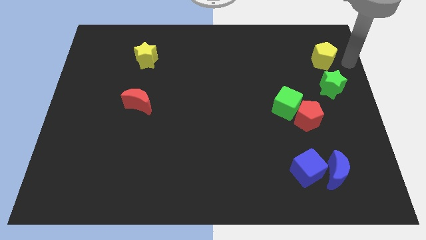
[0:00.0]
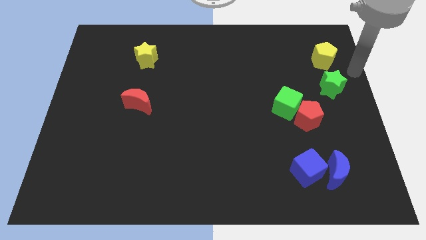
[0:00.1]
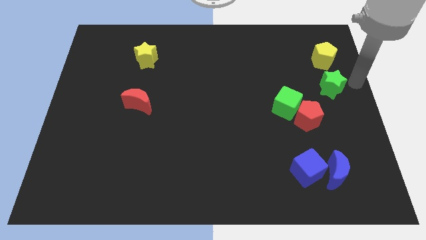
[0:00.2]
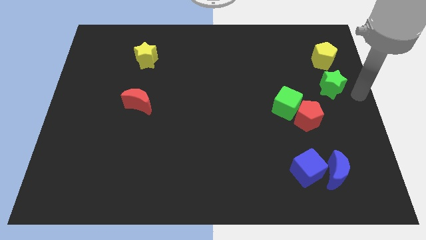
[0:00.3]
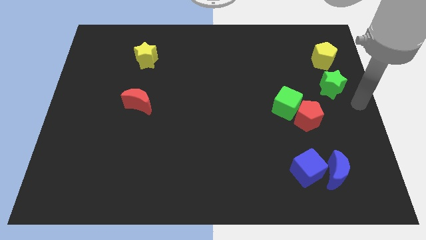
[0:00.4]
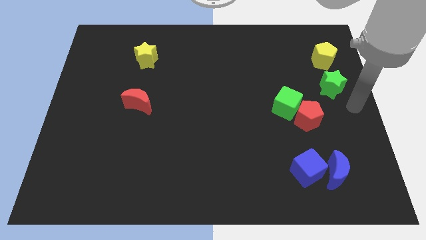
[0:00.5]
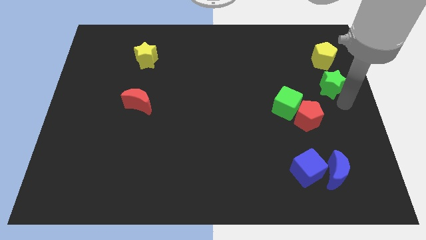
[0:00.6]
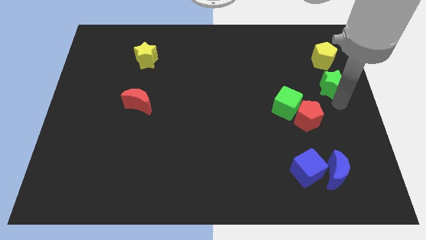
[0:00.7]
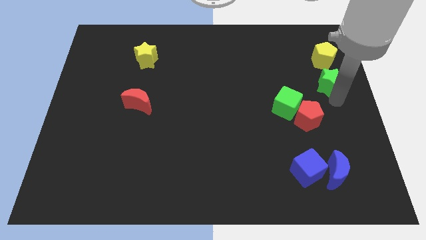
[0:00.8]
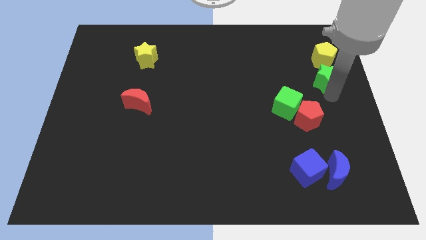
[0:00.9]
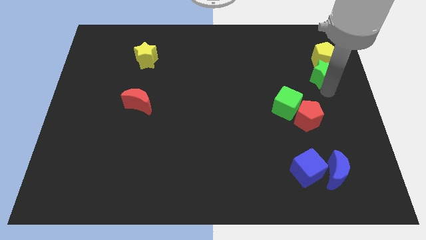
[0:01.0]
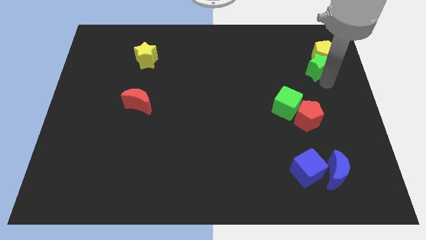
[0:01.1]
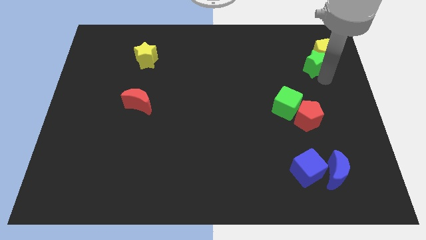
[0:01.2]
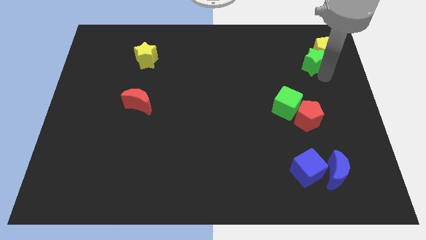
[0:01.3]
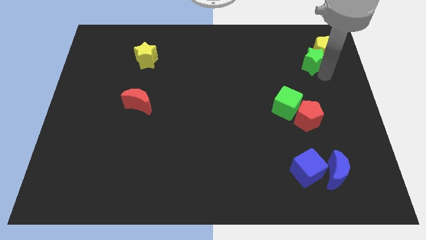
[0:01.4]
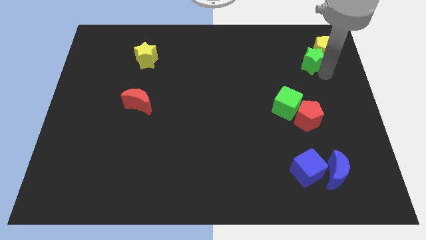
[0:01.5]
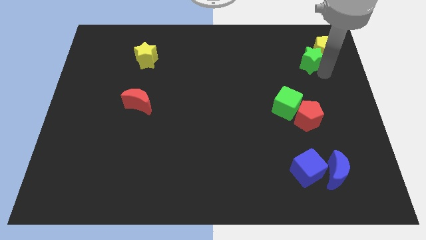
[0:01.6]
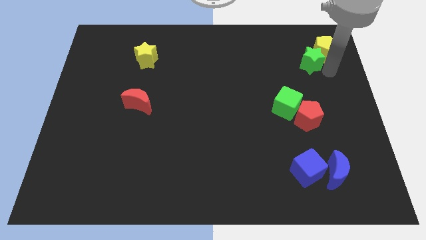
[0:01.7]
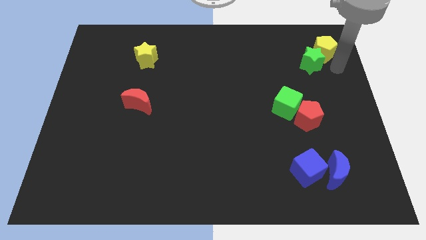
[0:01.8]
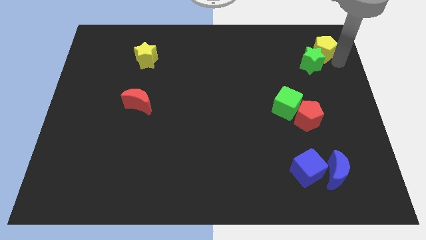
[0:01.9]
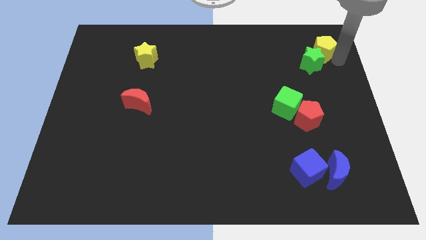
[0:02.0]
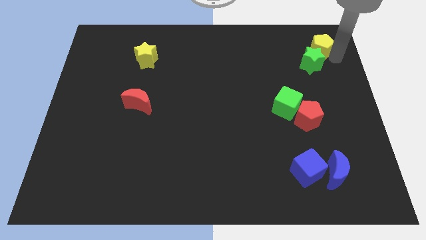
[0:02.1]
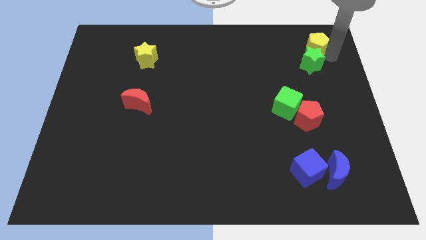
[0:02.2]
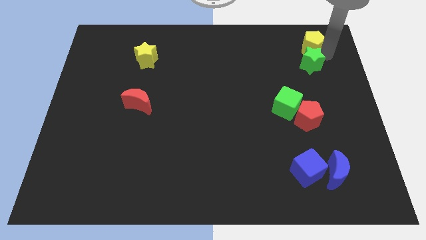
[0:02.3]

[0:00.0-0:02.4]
push the green star close to the yellow pentagon

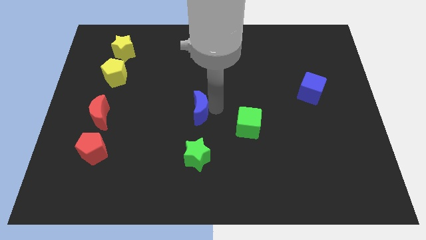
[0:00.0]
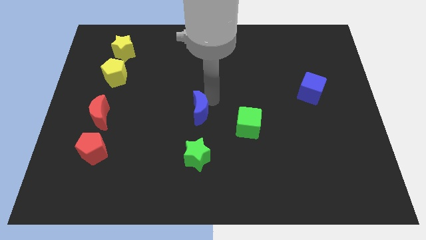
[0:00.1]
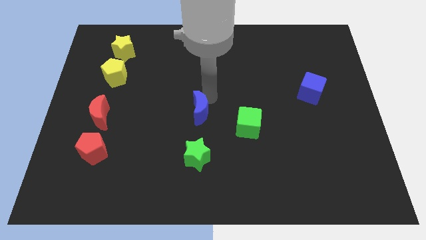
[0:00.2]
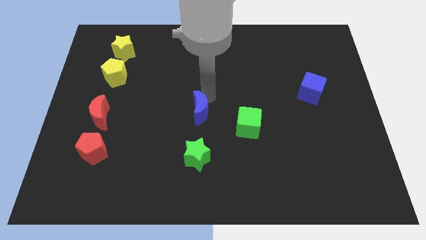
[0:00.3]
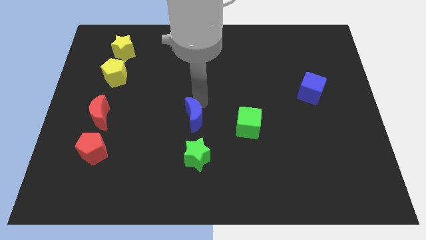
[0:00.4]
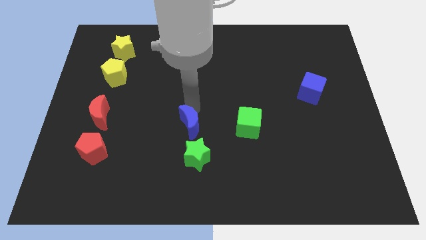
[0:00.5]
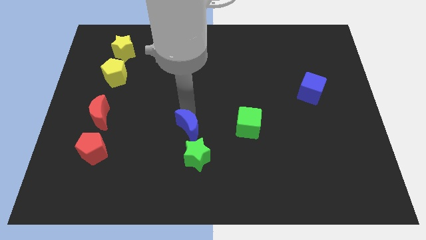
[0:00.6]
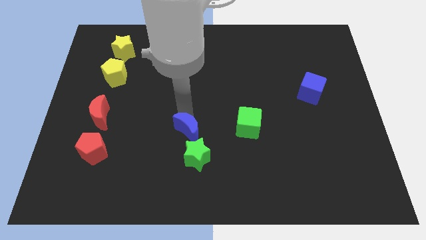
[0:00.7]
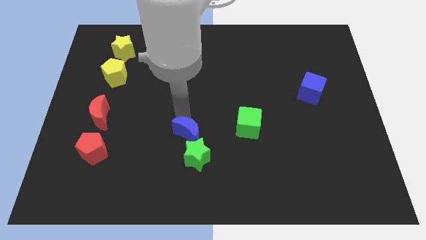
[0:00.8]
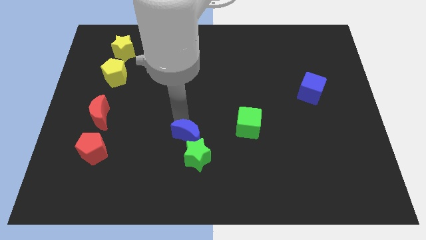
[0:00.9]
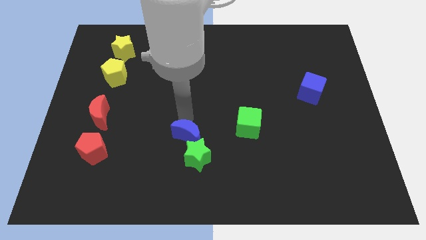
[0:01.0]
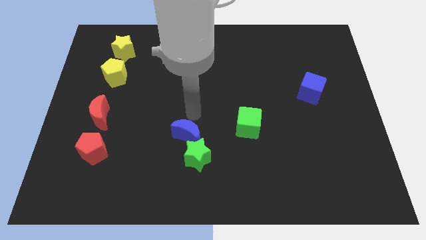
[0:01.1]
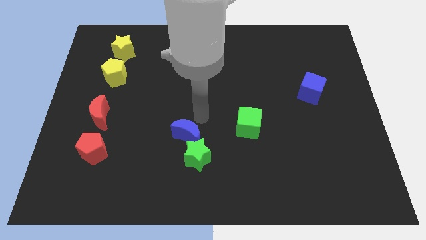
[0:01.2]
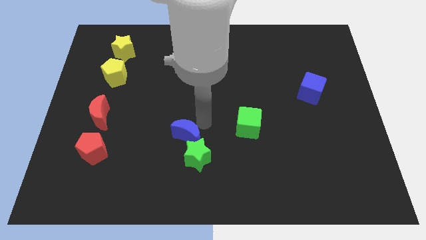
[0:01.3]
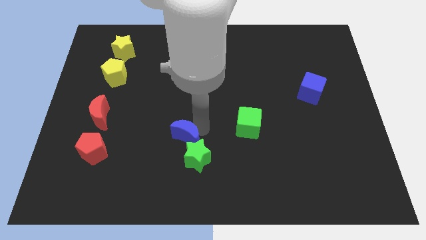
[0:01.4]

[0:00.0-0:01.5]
move the blue crescent into the green star

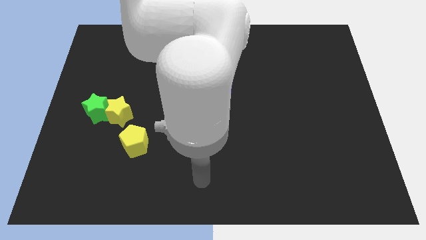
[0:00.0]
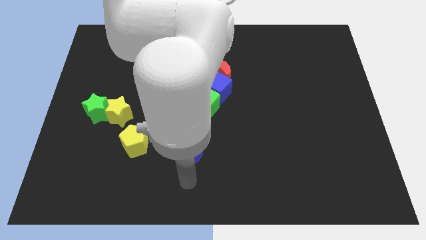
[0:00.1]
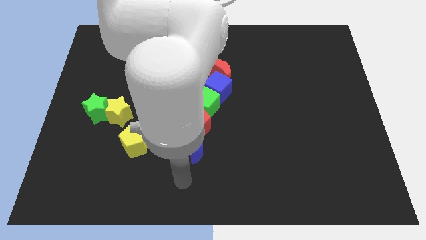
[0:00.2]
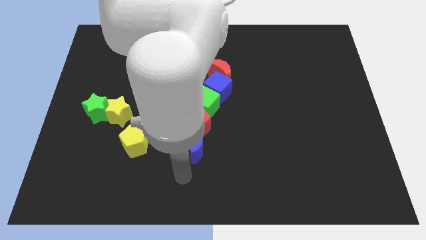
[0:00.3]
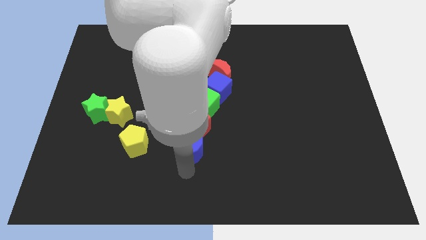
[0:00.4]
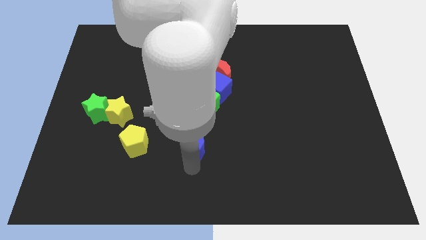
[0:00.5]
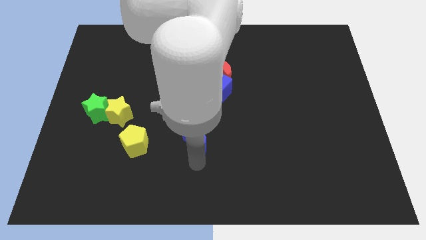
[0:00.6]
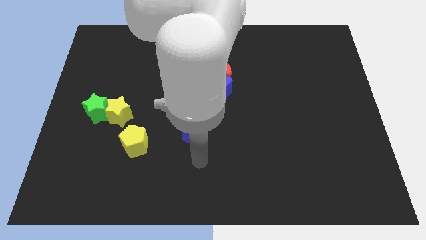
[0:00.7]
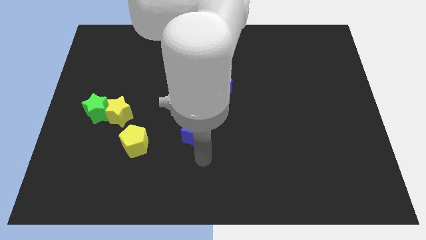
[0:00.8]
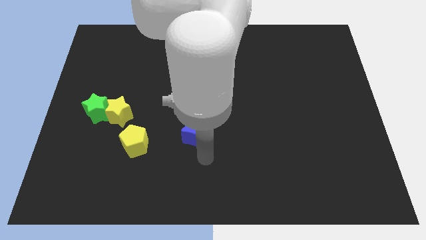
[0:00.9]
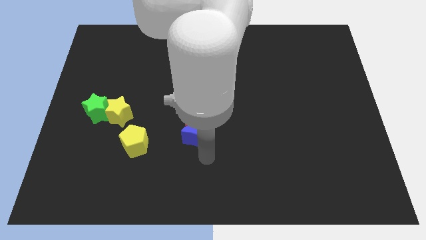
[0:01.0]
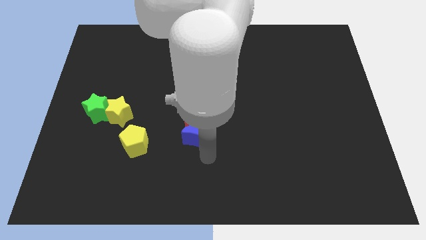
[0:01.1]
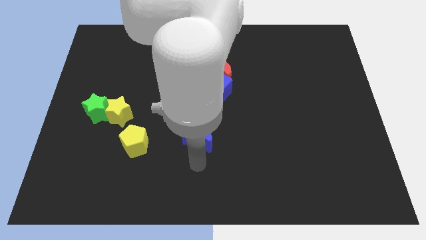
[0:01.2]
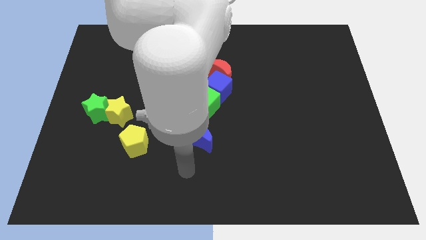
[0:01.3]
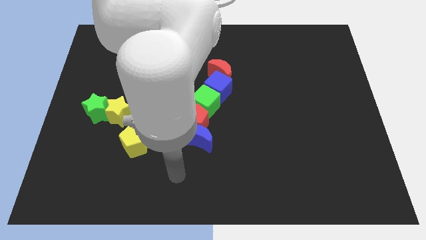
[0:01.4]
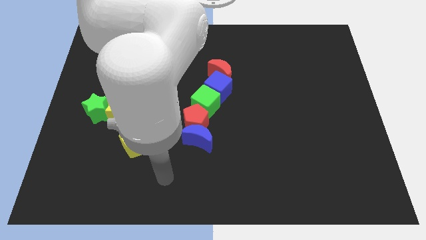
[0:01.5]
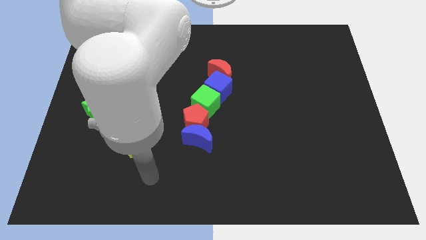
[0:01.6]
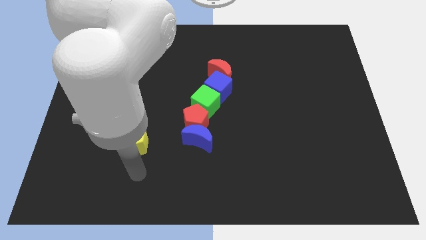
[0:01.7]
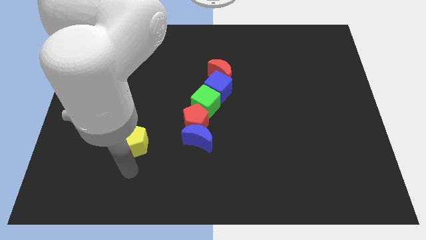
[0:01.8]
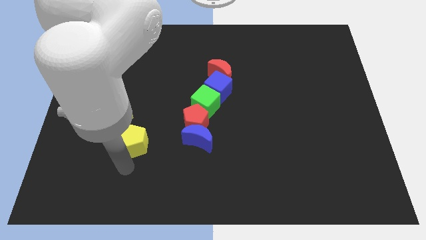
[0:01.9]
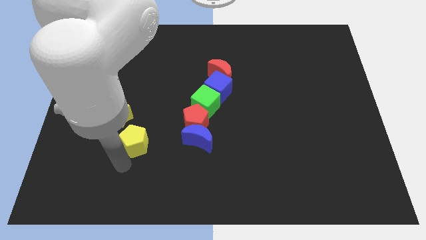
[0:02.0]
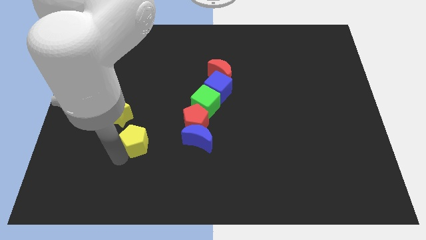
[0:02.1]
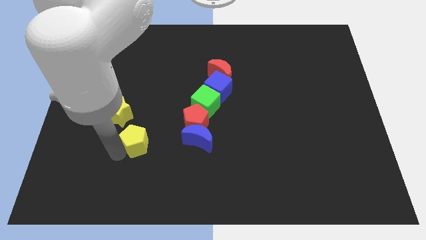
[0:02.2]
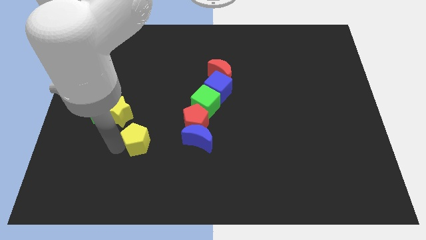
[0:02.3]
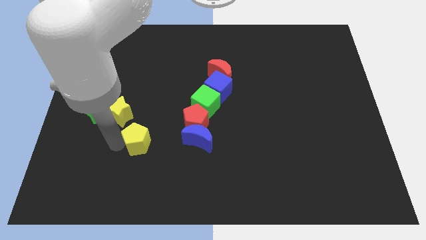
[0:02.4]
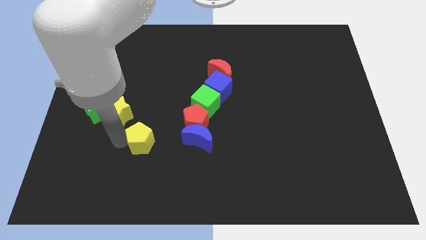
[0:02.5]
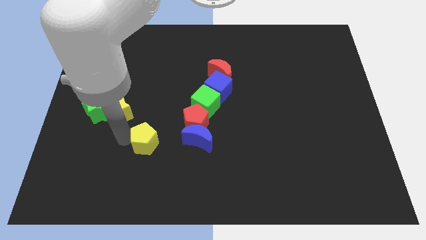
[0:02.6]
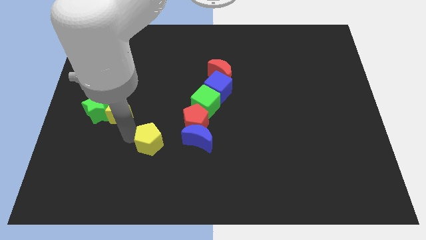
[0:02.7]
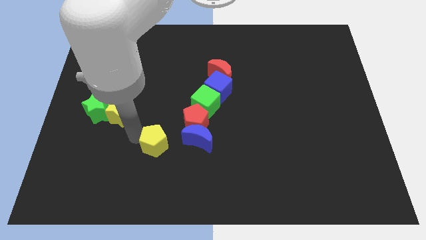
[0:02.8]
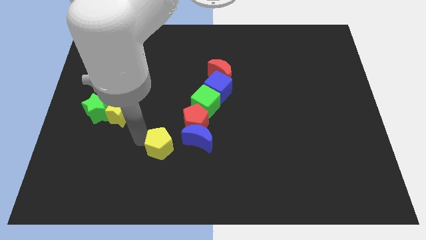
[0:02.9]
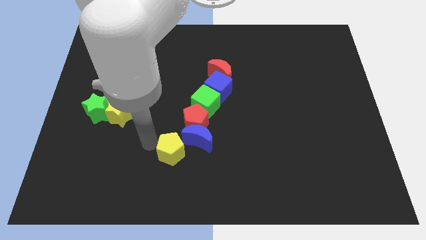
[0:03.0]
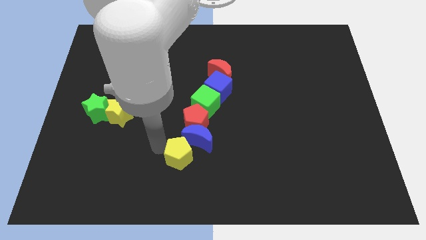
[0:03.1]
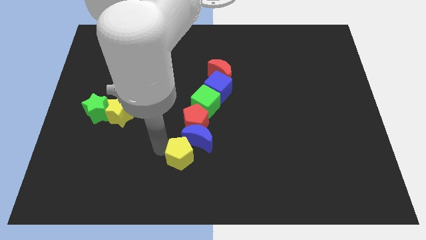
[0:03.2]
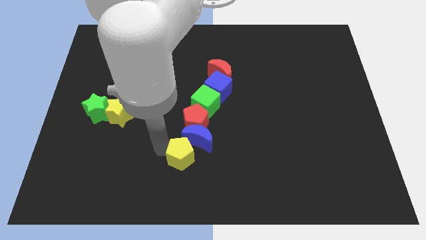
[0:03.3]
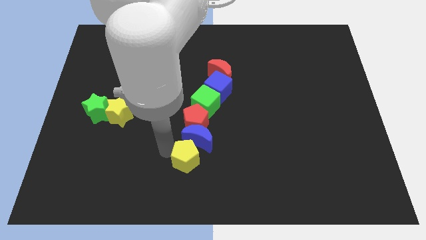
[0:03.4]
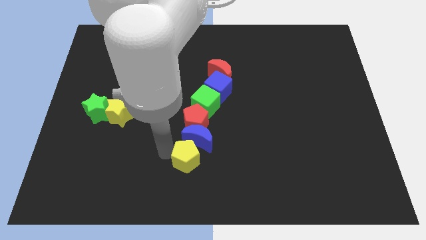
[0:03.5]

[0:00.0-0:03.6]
push the yellow pentagon to the bottom side of the blue moon

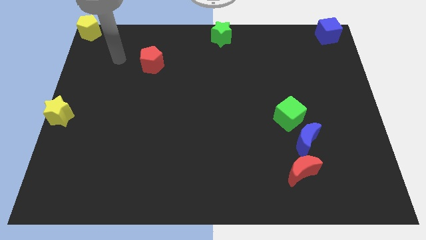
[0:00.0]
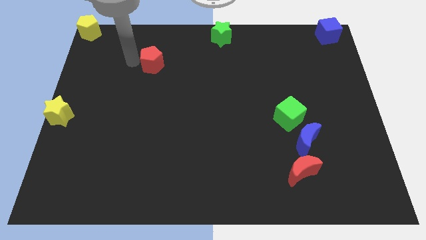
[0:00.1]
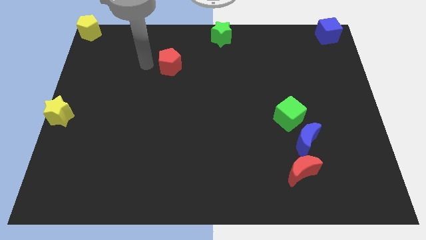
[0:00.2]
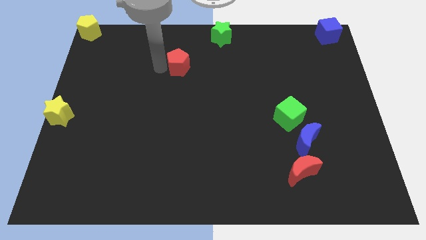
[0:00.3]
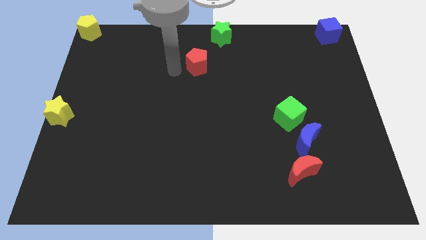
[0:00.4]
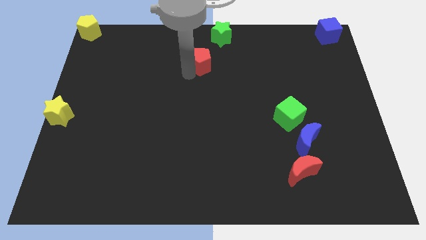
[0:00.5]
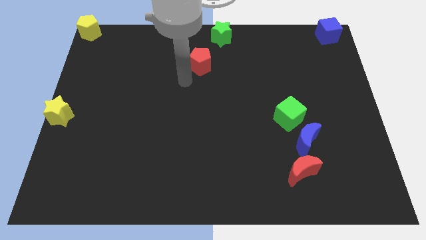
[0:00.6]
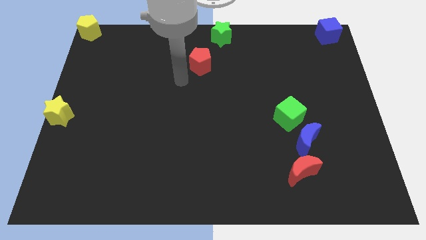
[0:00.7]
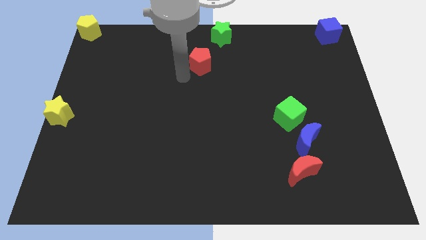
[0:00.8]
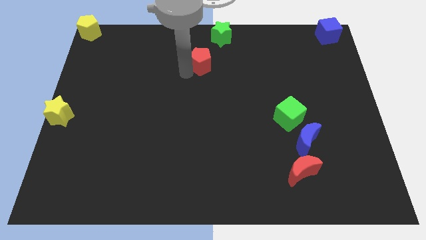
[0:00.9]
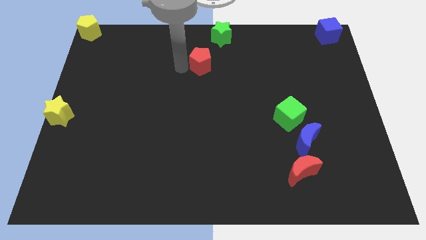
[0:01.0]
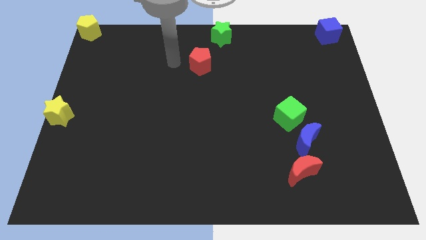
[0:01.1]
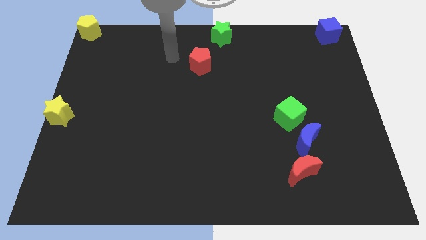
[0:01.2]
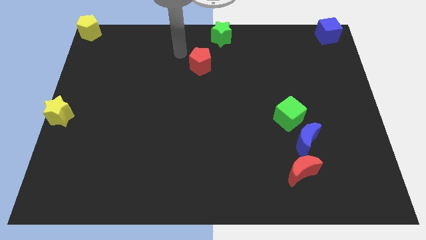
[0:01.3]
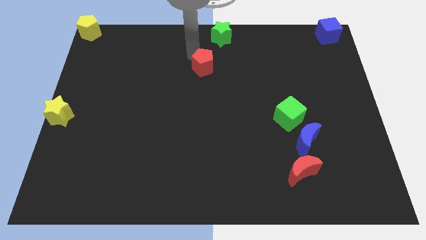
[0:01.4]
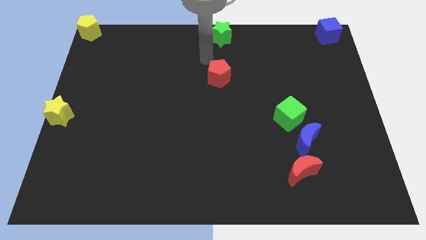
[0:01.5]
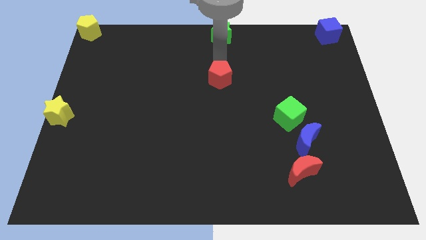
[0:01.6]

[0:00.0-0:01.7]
place the red pentagon vertically below the green star
